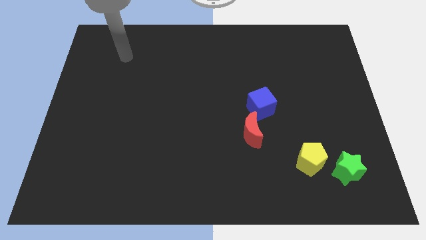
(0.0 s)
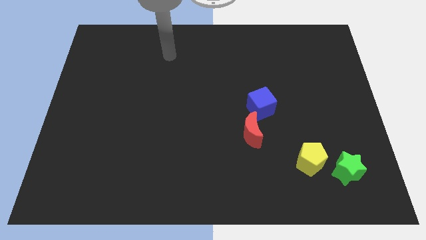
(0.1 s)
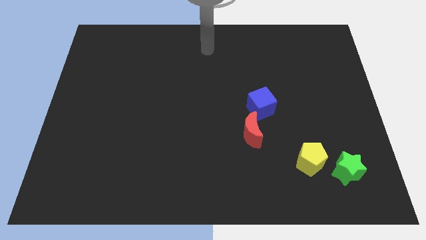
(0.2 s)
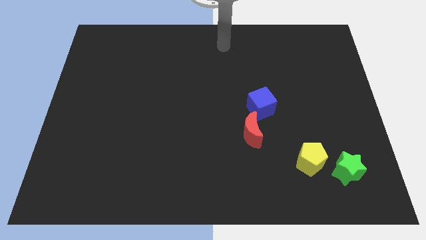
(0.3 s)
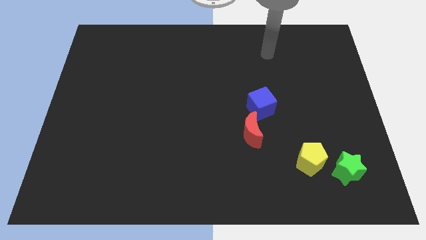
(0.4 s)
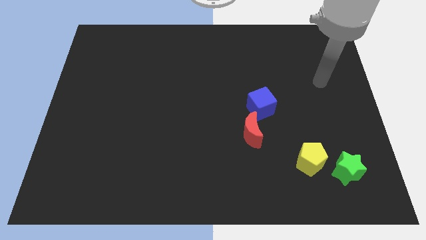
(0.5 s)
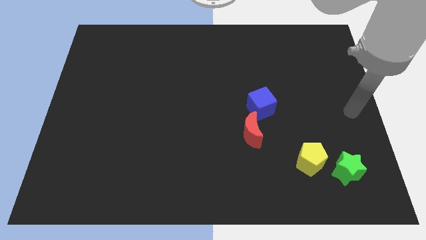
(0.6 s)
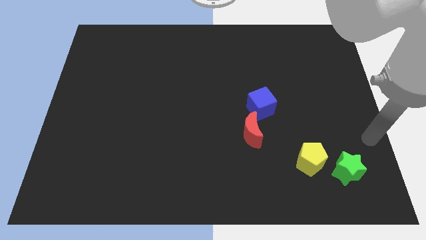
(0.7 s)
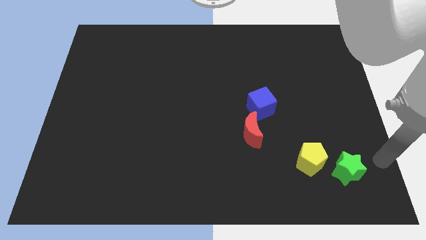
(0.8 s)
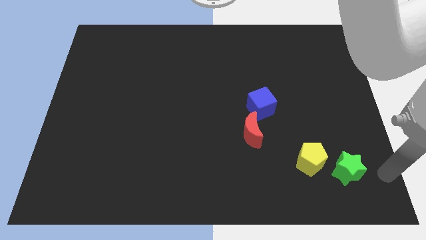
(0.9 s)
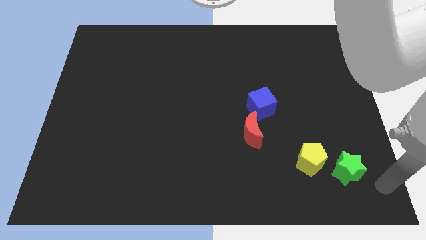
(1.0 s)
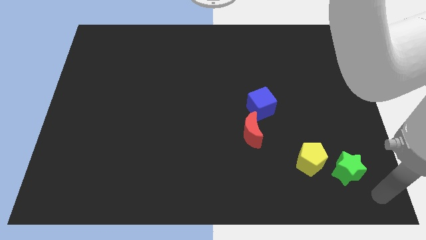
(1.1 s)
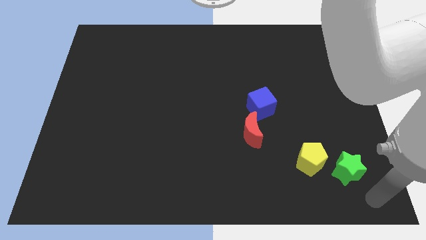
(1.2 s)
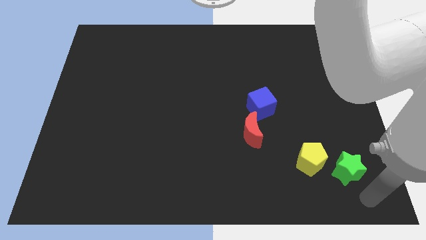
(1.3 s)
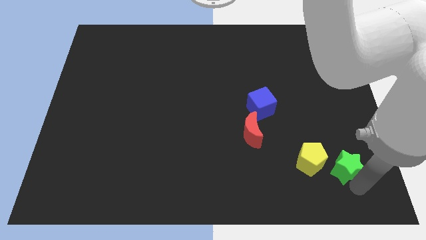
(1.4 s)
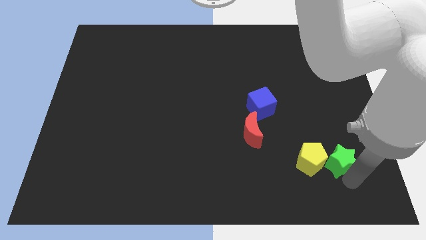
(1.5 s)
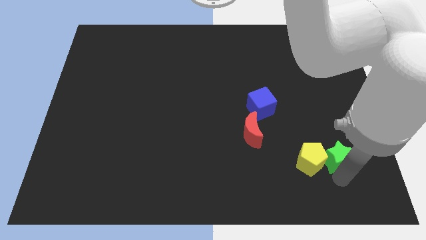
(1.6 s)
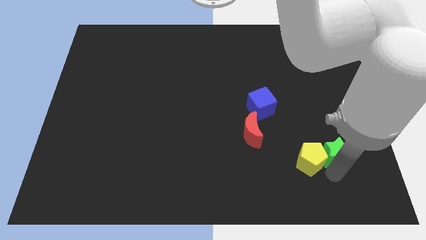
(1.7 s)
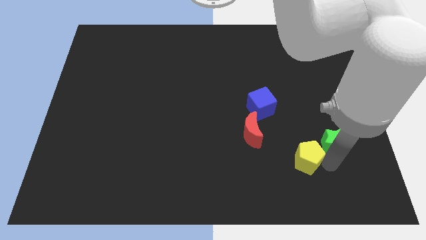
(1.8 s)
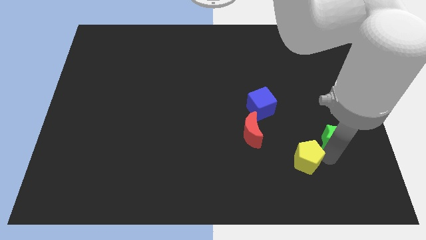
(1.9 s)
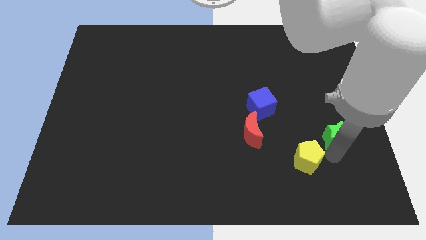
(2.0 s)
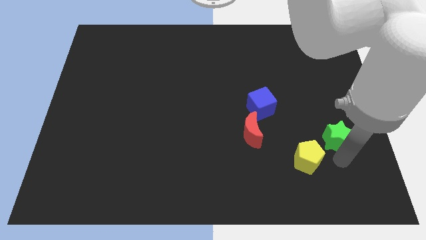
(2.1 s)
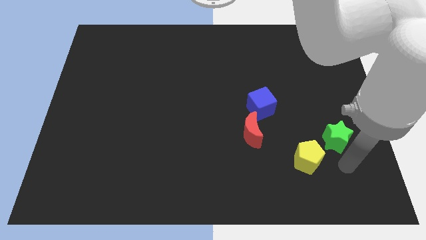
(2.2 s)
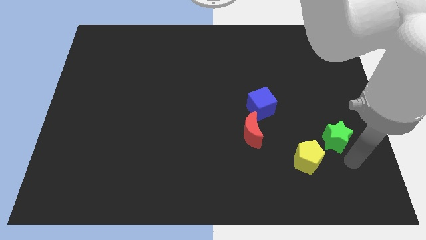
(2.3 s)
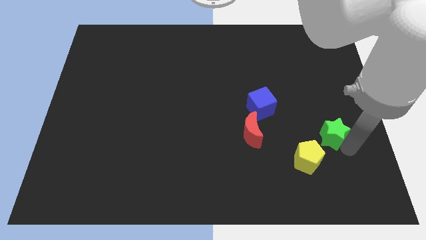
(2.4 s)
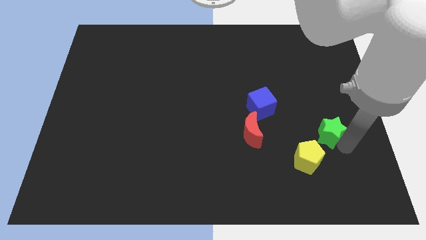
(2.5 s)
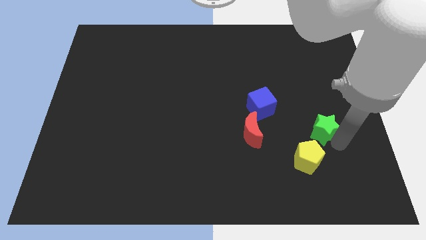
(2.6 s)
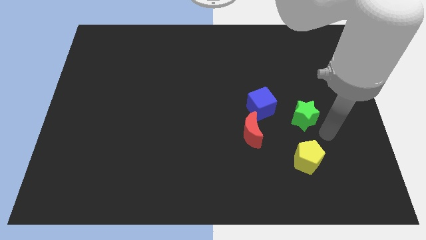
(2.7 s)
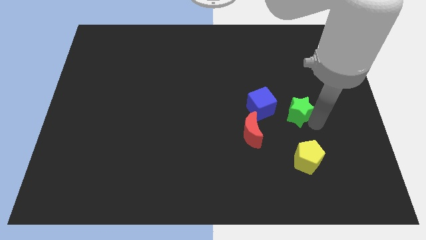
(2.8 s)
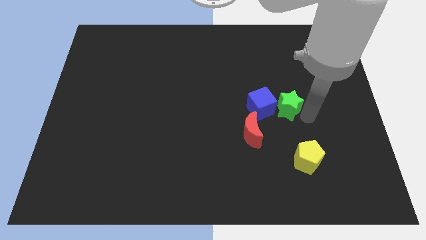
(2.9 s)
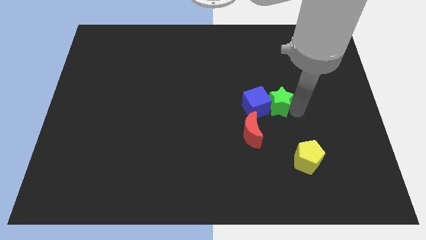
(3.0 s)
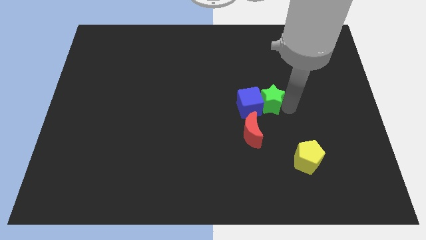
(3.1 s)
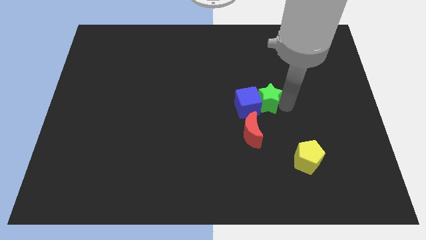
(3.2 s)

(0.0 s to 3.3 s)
slide the star towards the blue cube

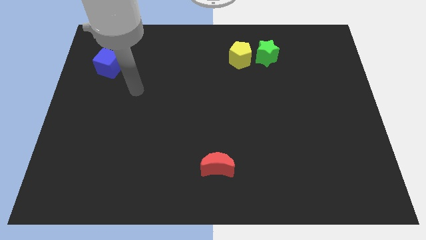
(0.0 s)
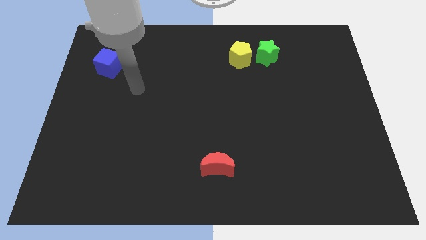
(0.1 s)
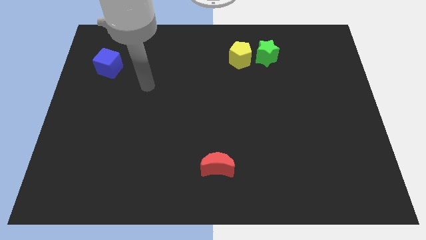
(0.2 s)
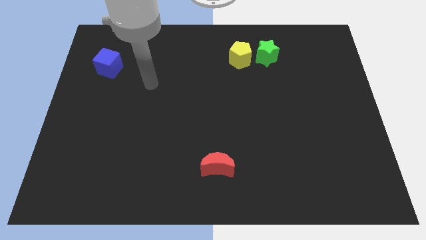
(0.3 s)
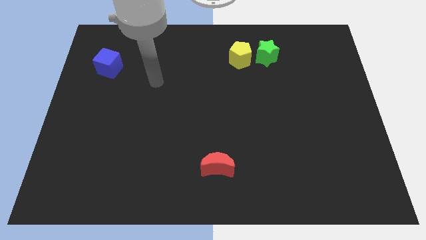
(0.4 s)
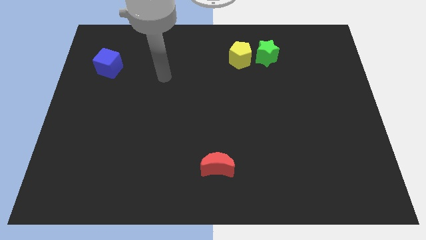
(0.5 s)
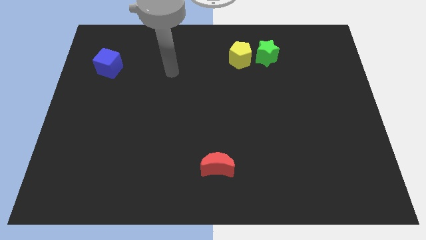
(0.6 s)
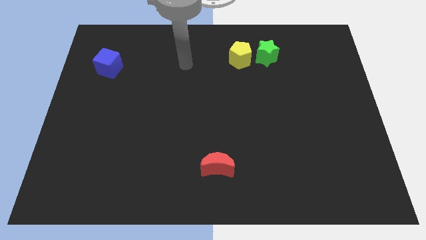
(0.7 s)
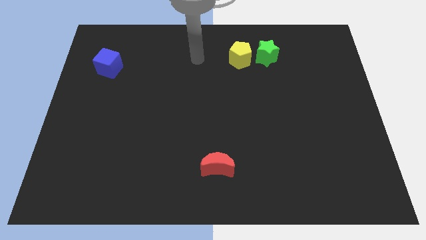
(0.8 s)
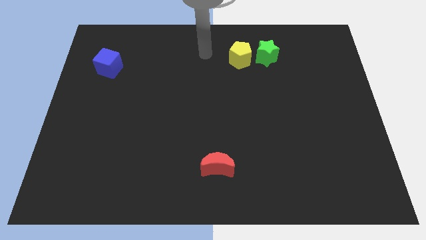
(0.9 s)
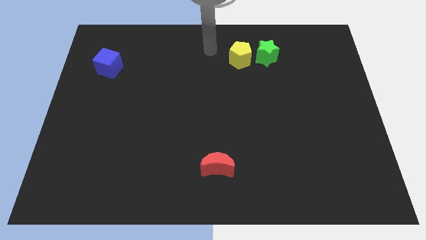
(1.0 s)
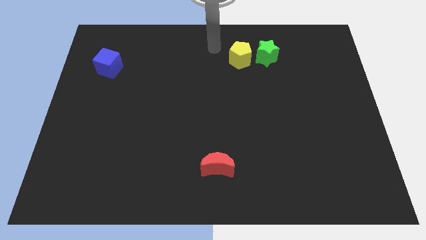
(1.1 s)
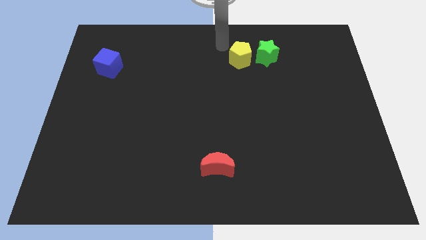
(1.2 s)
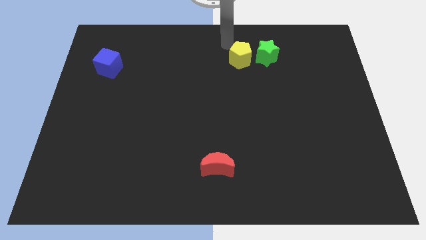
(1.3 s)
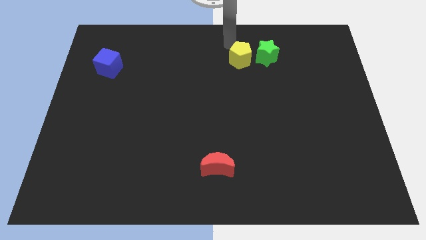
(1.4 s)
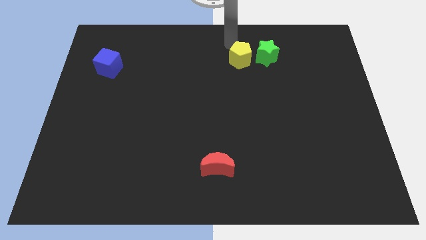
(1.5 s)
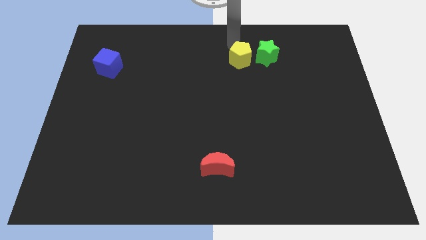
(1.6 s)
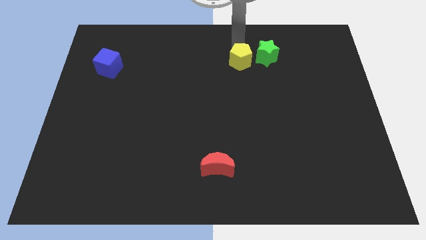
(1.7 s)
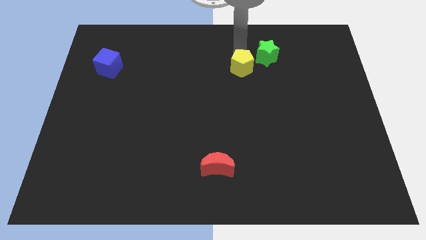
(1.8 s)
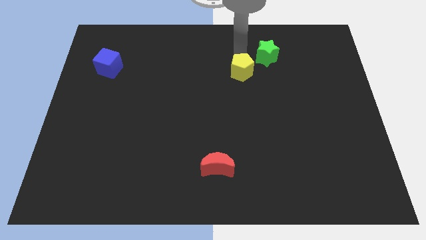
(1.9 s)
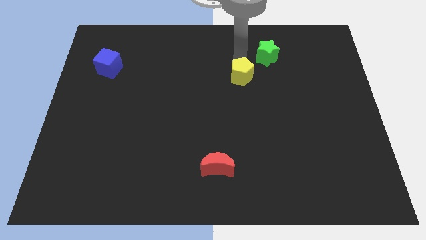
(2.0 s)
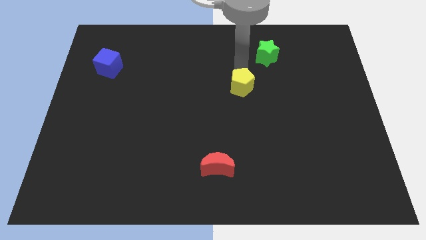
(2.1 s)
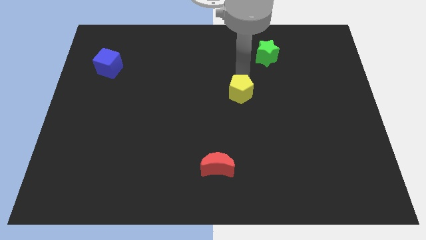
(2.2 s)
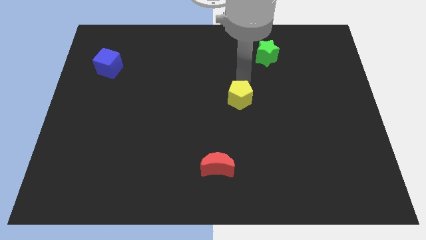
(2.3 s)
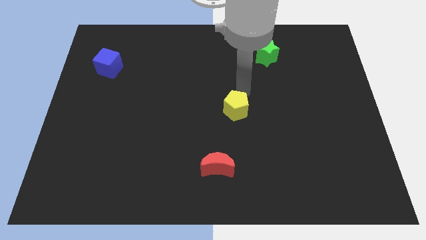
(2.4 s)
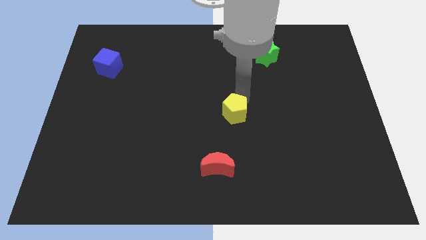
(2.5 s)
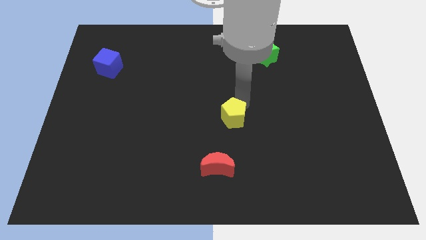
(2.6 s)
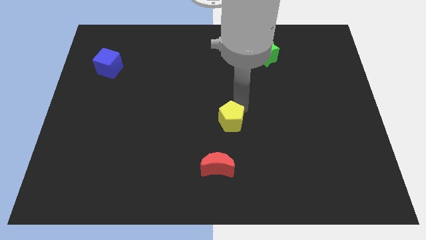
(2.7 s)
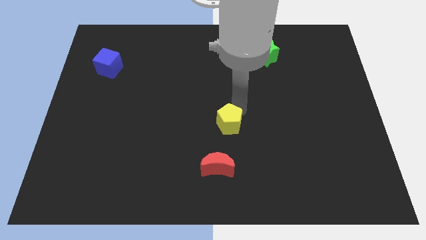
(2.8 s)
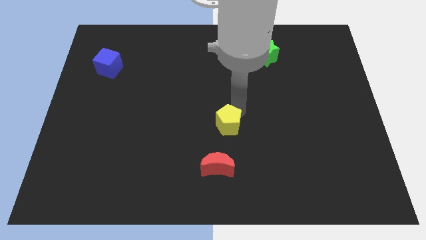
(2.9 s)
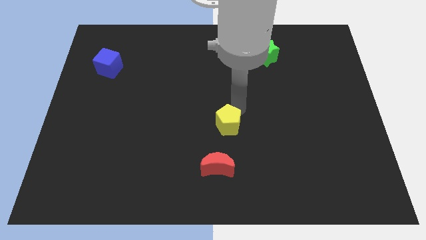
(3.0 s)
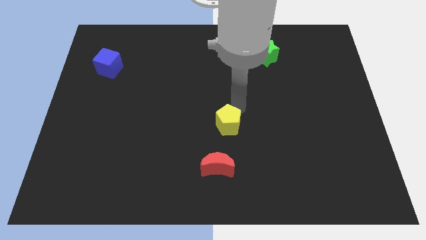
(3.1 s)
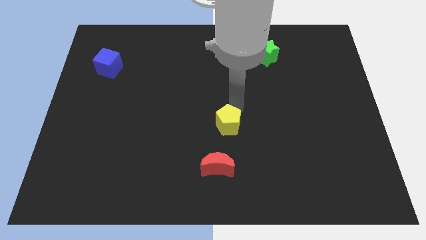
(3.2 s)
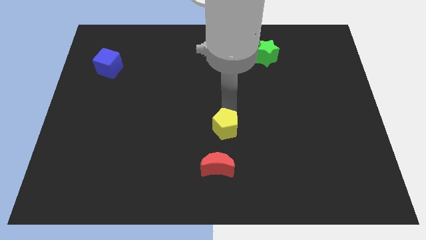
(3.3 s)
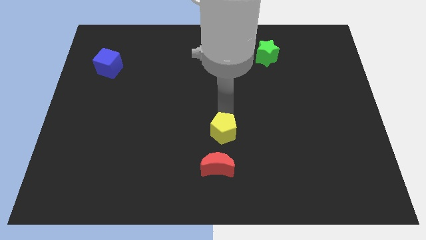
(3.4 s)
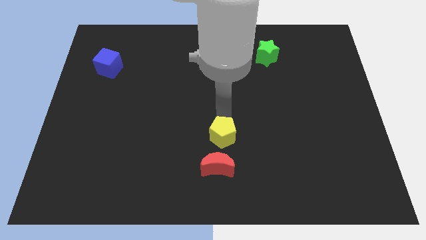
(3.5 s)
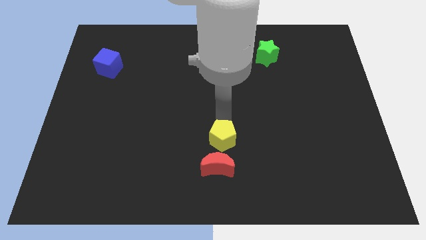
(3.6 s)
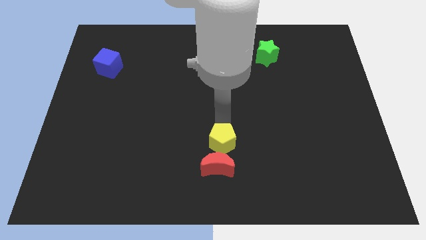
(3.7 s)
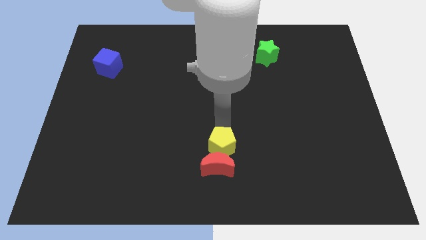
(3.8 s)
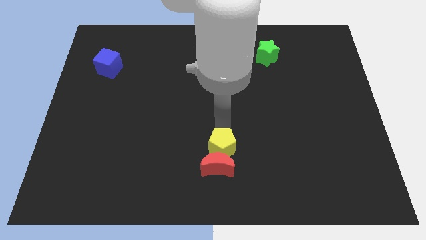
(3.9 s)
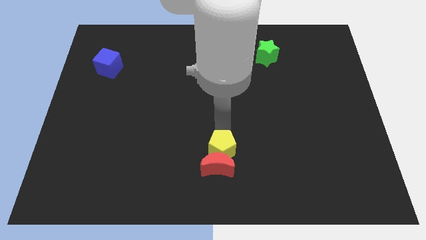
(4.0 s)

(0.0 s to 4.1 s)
push the yellow block close to the red moon

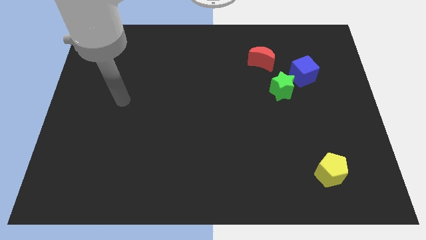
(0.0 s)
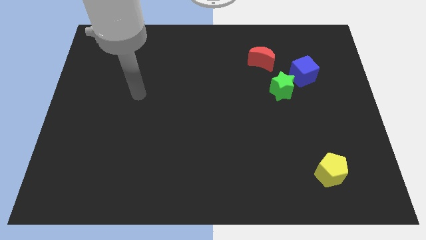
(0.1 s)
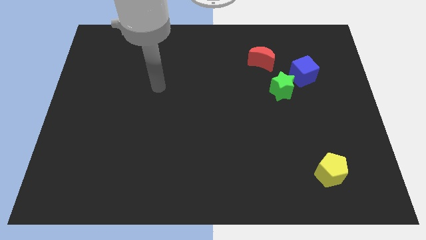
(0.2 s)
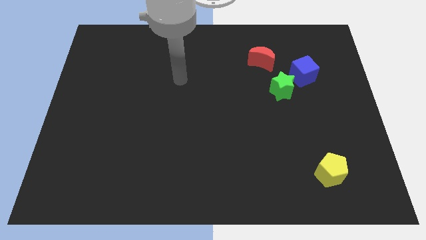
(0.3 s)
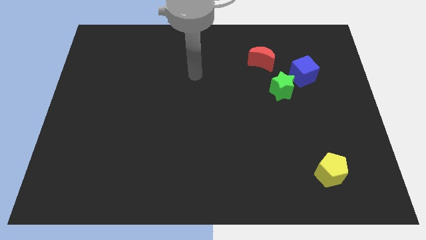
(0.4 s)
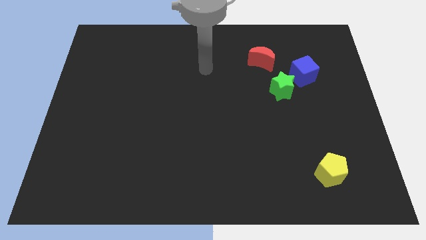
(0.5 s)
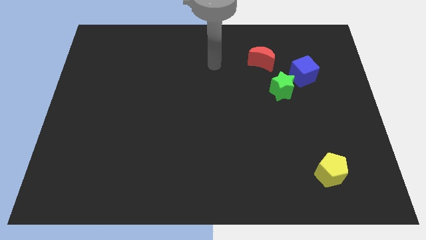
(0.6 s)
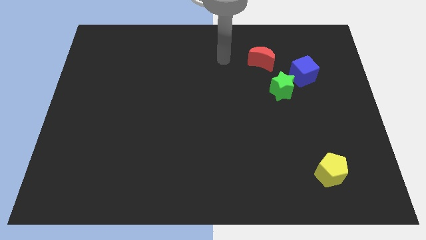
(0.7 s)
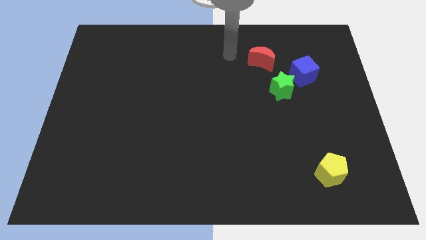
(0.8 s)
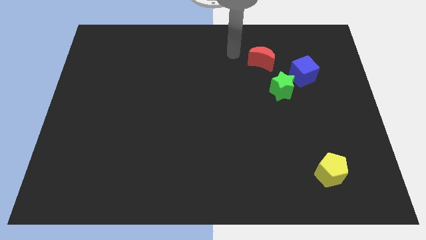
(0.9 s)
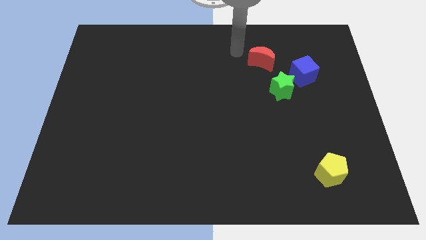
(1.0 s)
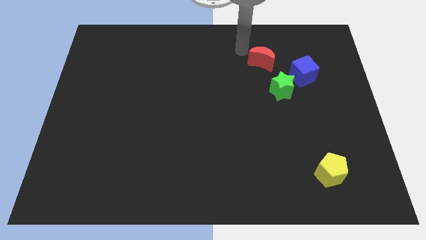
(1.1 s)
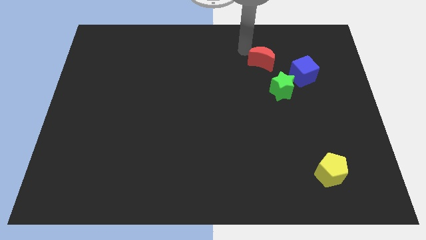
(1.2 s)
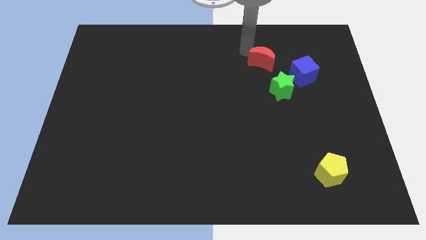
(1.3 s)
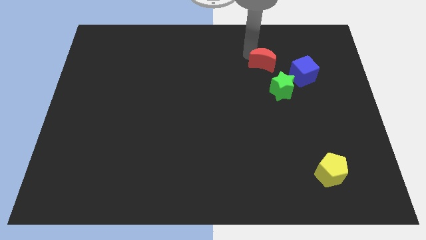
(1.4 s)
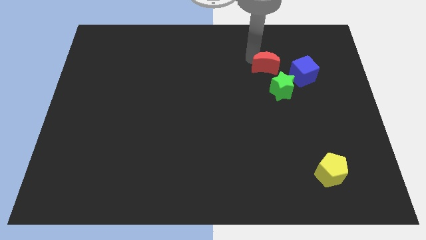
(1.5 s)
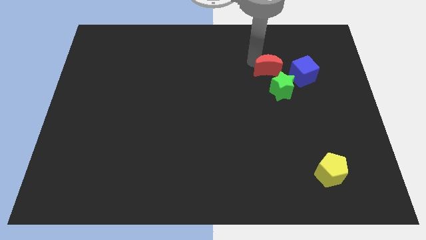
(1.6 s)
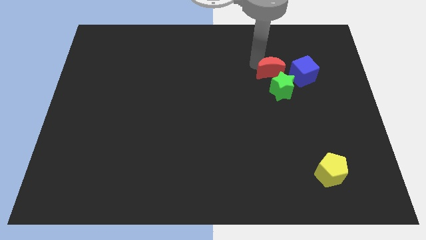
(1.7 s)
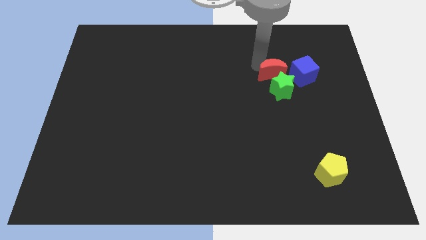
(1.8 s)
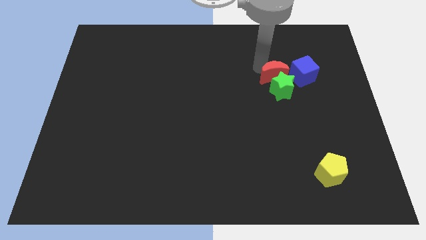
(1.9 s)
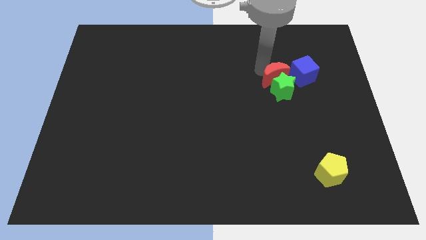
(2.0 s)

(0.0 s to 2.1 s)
put the red block towards the green block
